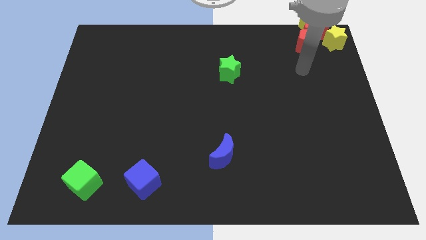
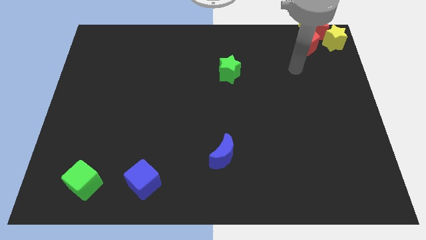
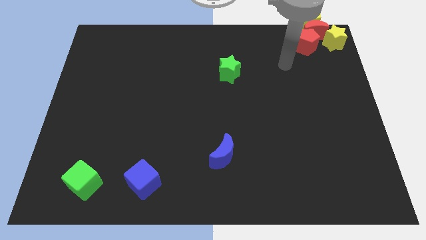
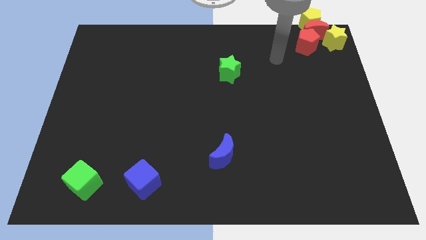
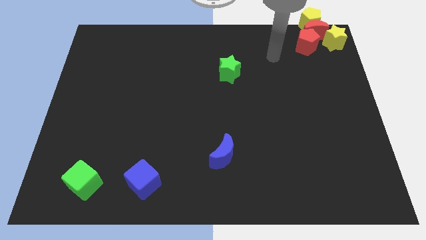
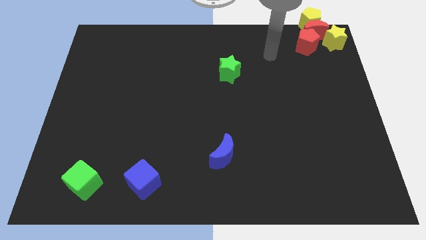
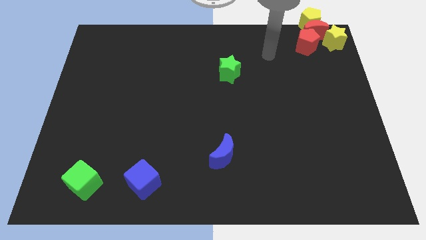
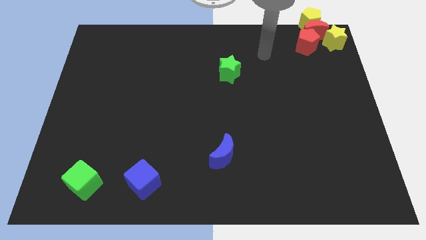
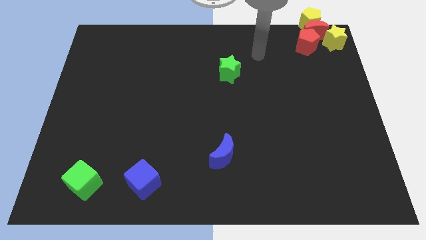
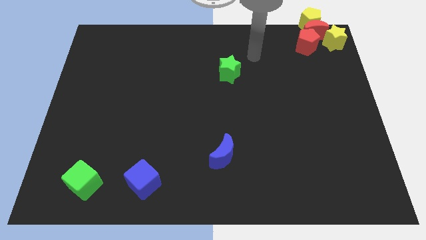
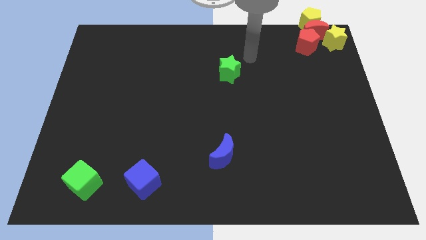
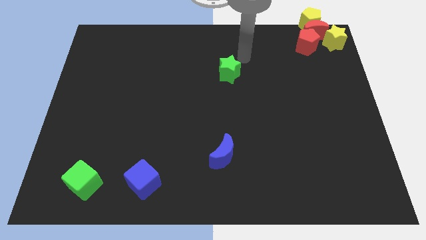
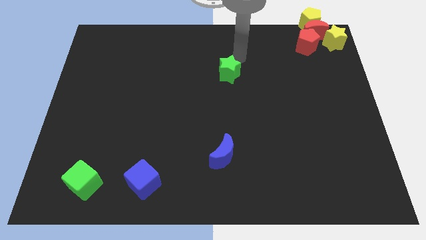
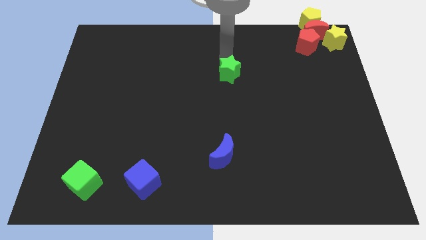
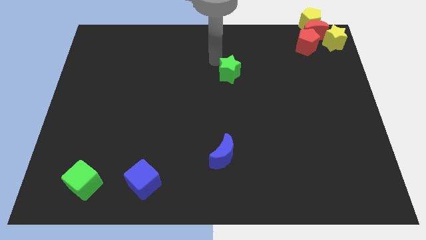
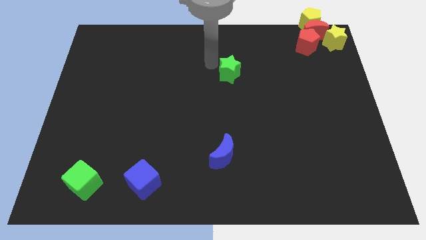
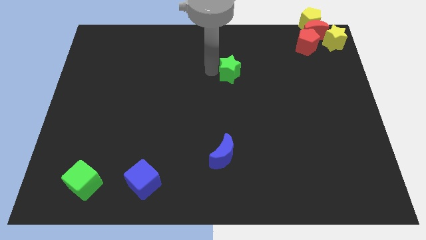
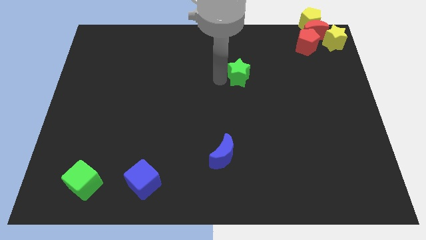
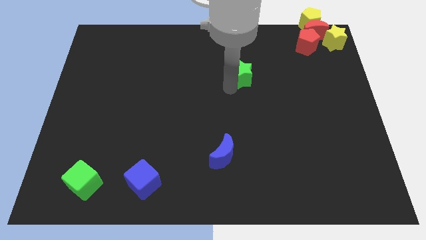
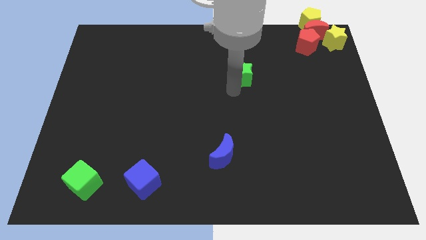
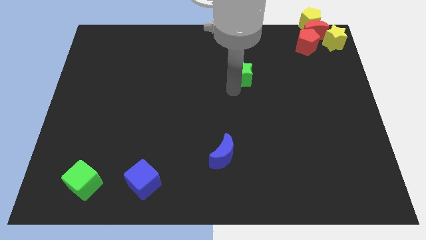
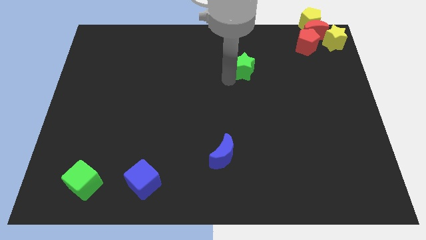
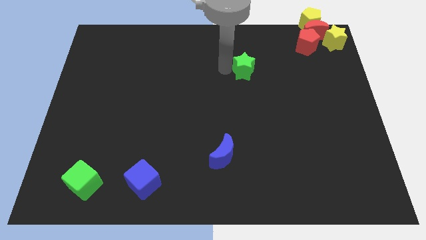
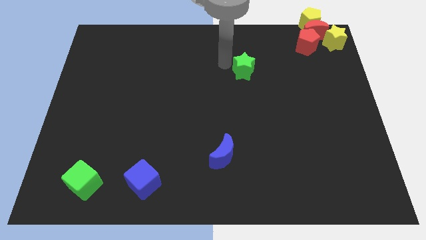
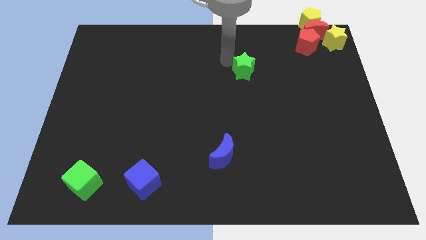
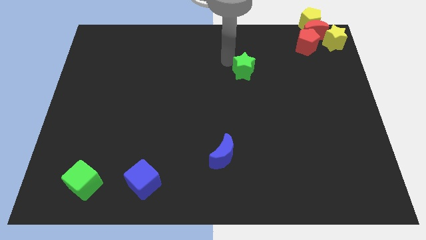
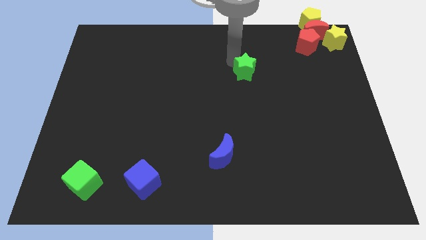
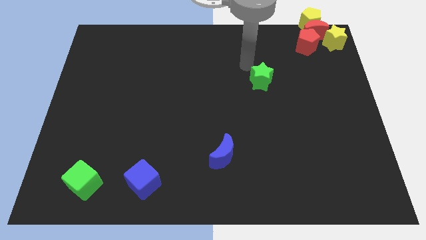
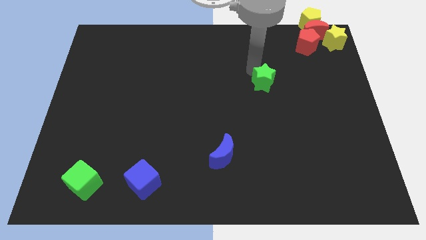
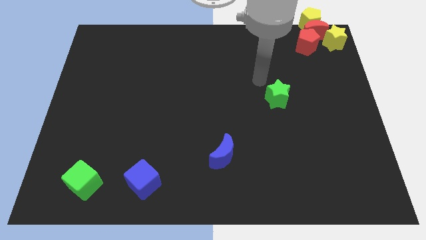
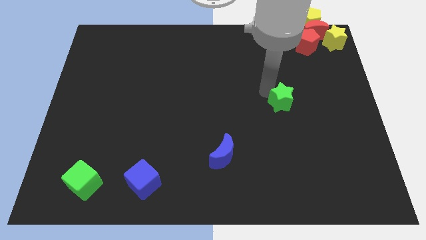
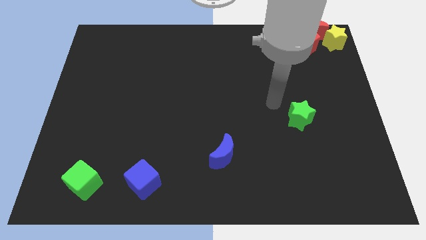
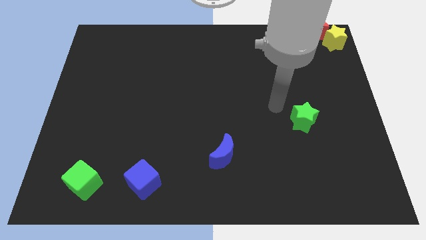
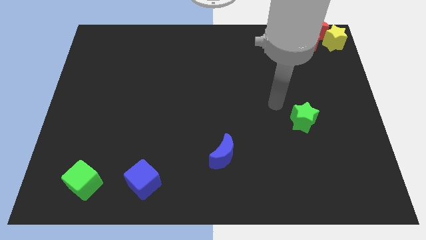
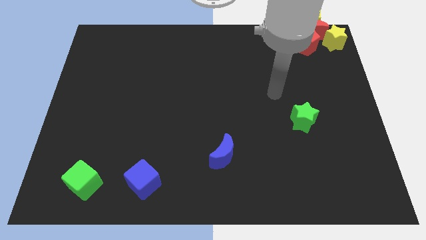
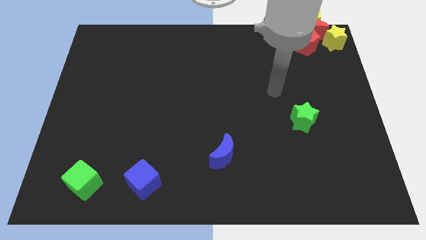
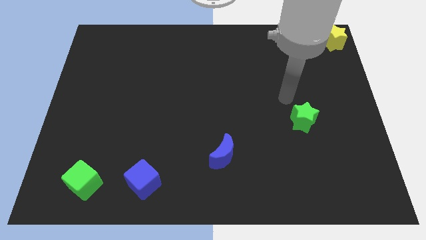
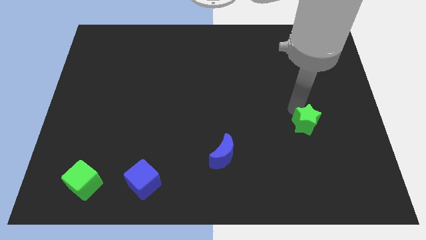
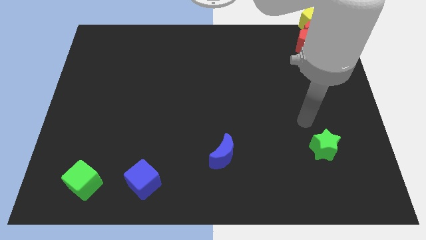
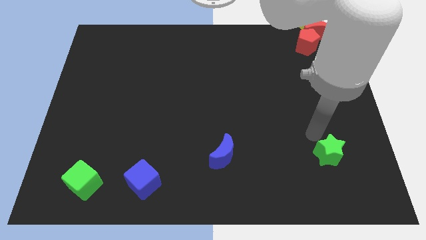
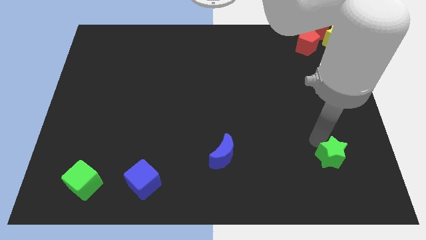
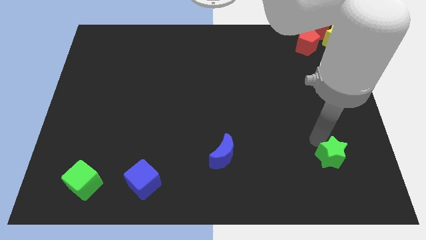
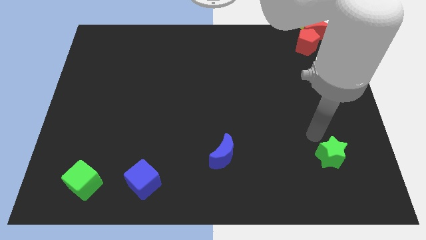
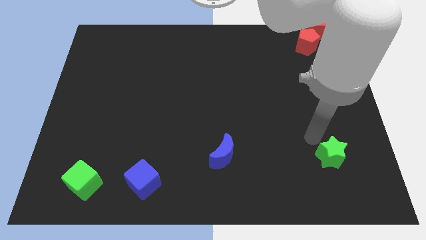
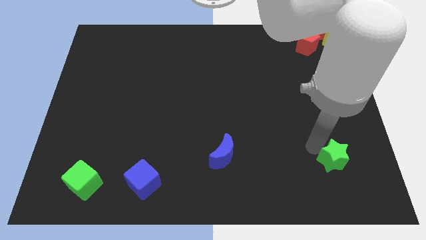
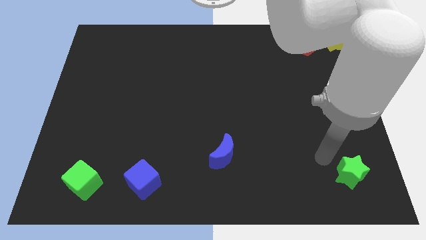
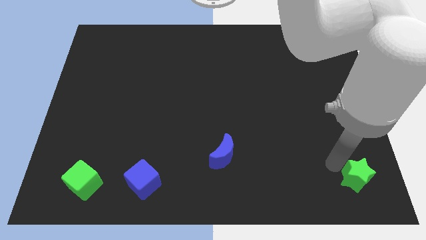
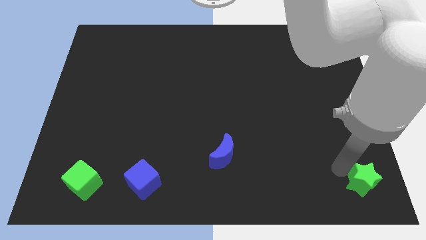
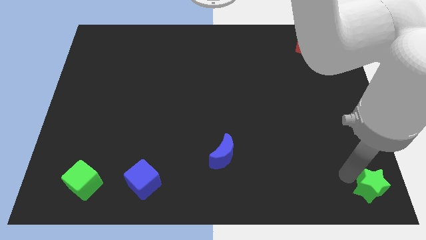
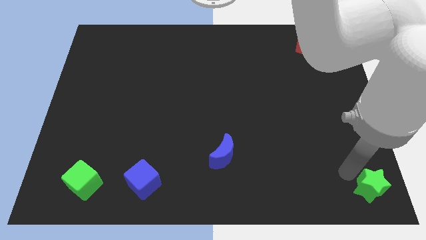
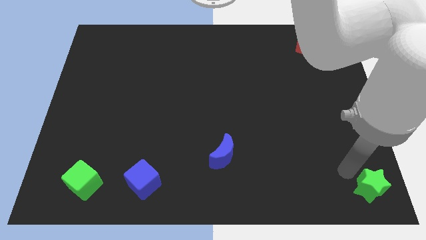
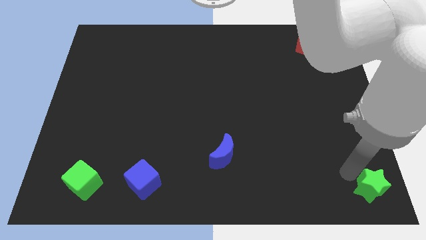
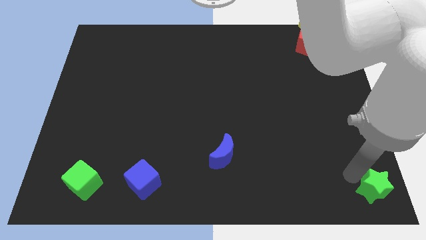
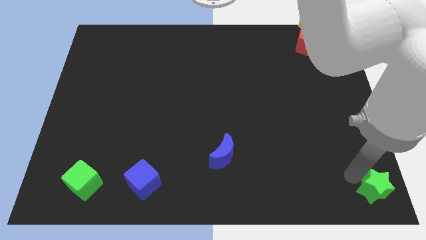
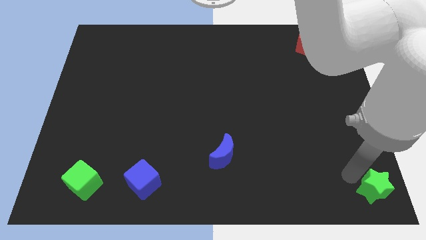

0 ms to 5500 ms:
push the green star to the bottom right corner of the board

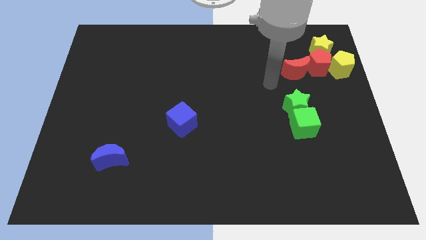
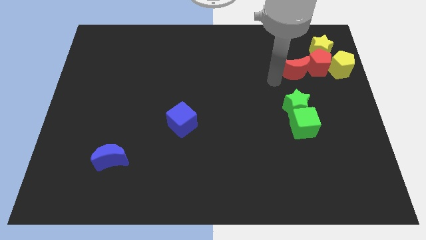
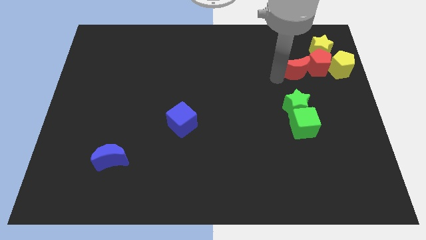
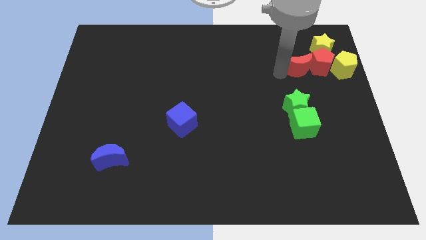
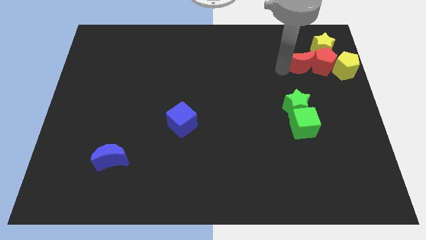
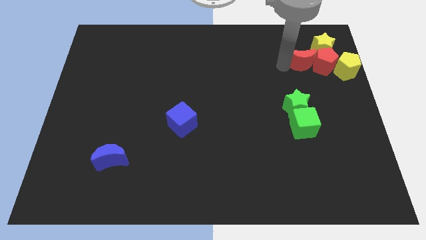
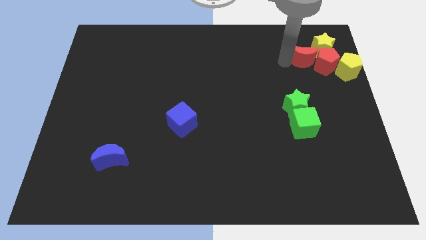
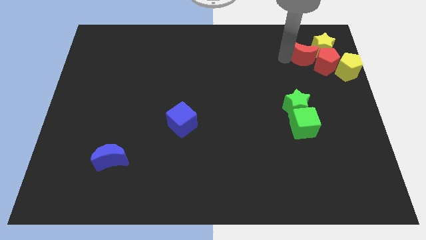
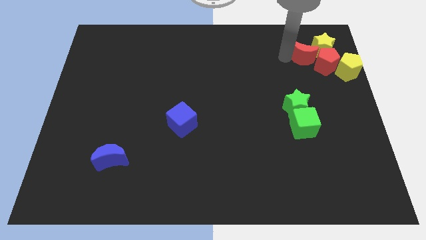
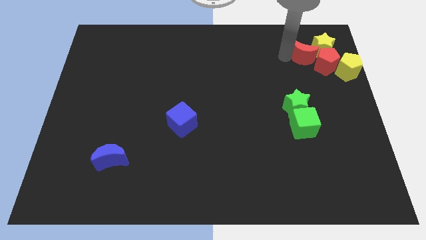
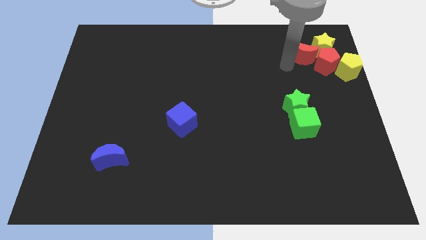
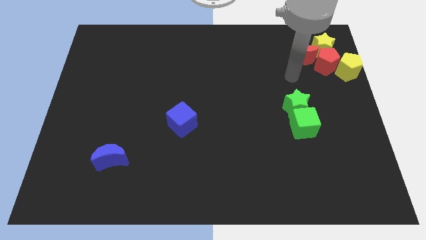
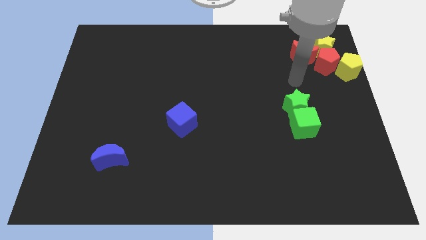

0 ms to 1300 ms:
push red crescent towards the top left of the red pentagon

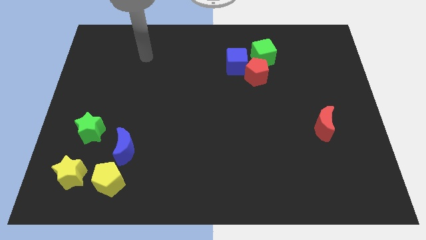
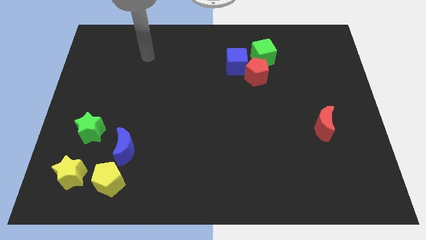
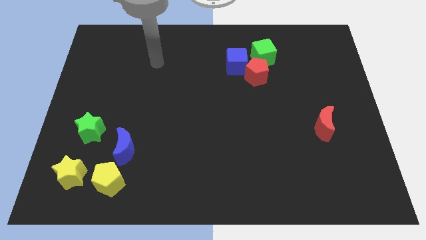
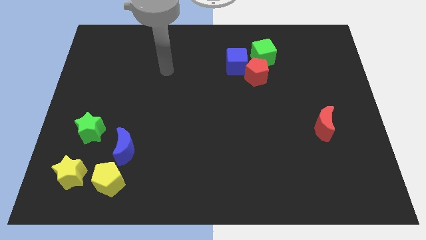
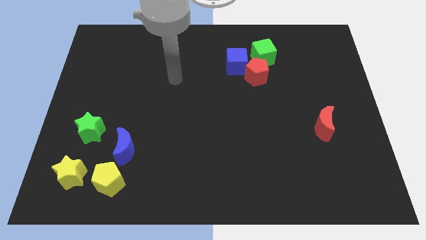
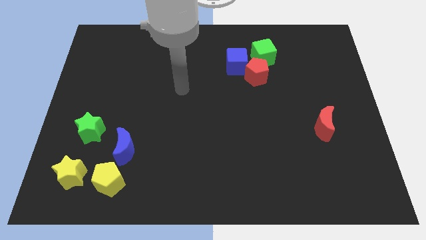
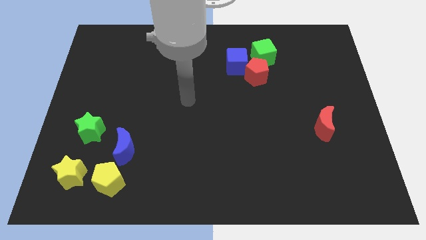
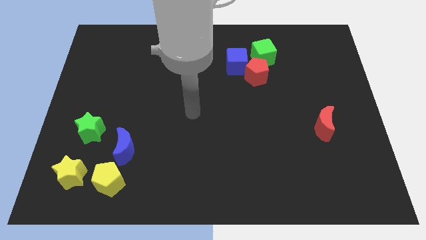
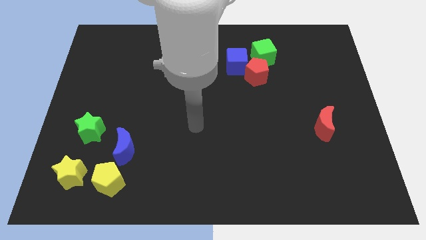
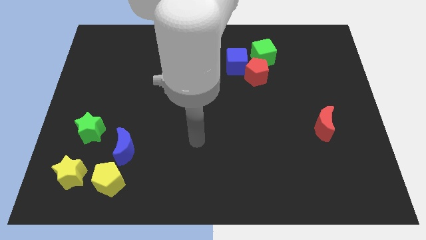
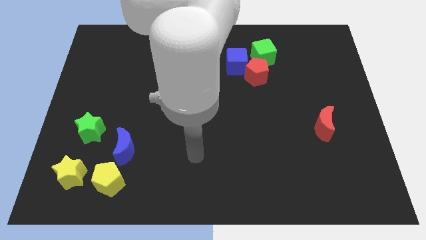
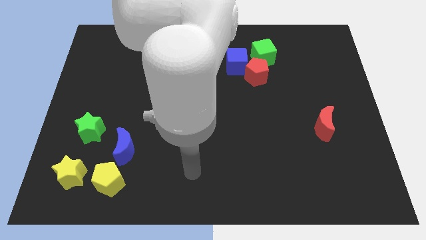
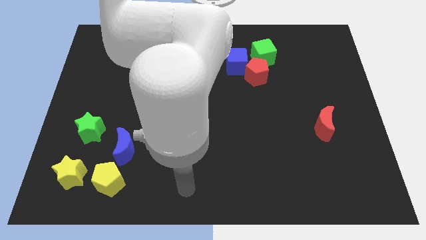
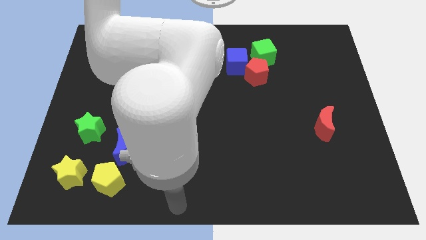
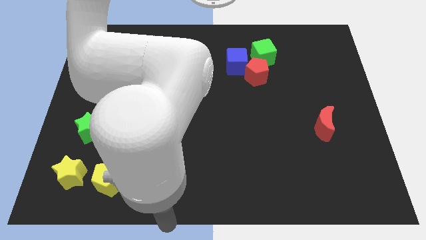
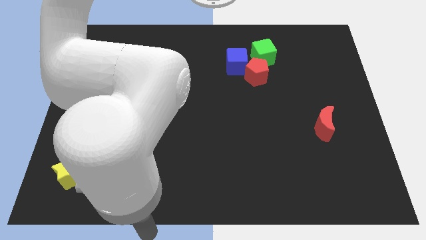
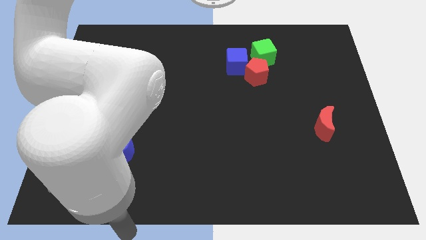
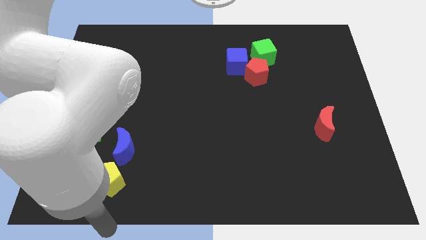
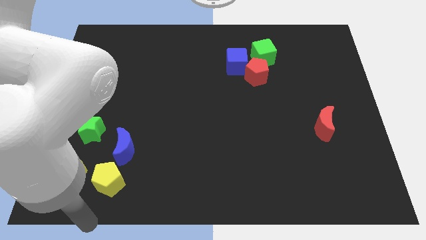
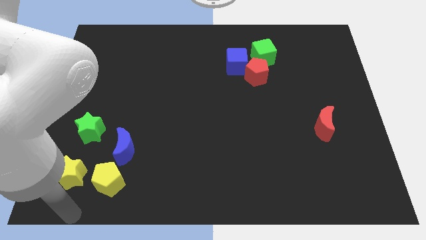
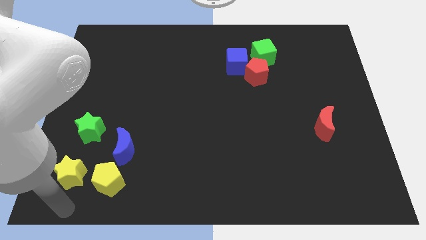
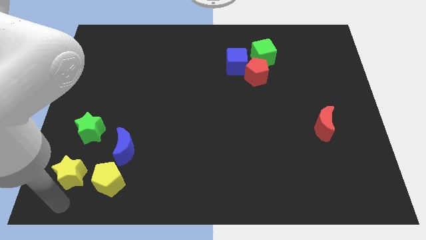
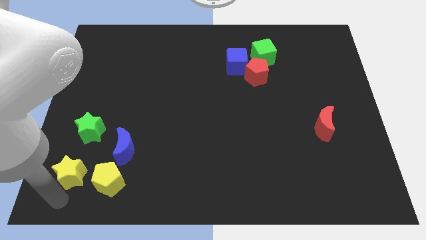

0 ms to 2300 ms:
move your arm from the top to bottom left side
